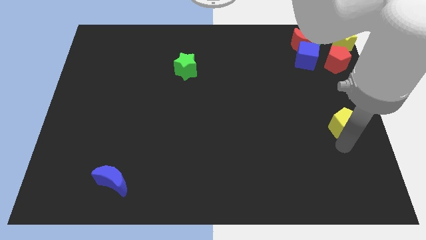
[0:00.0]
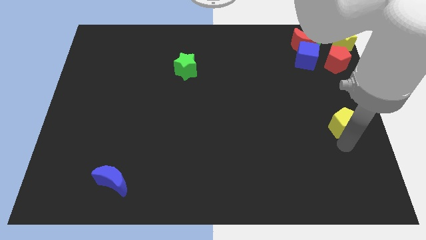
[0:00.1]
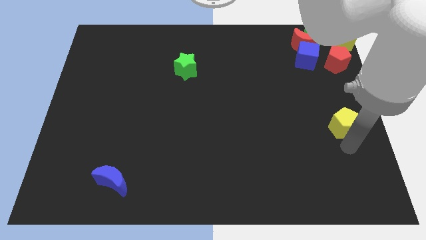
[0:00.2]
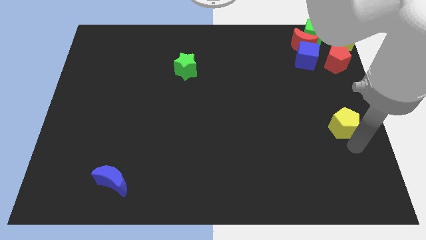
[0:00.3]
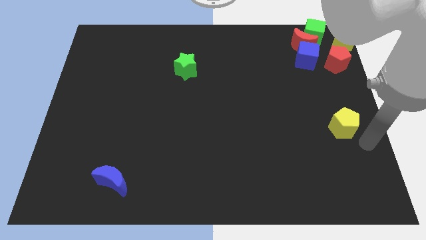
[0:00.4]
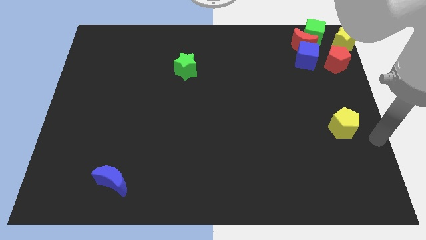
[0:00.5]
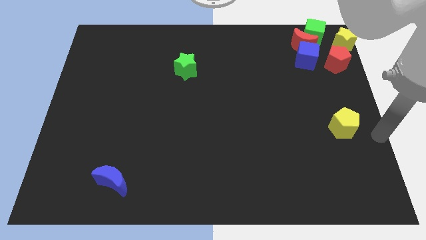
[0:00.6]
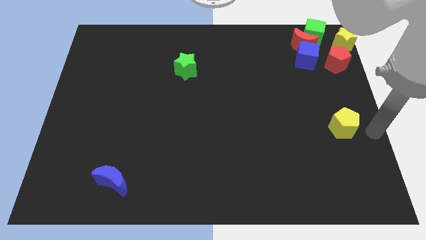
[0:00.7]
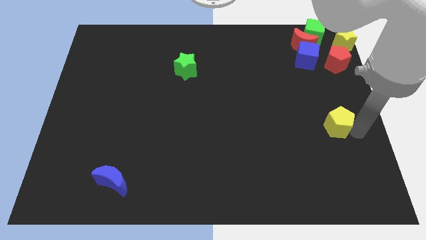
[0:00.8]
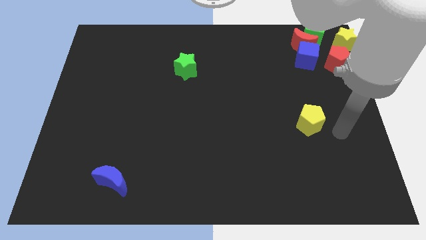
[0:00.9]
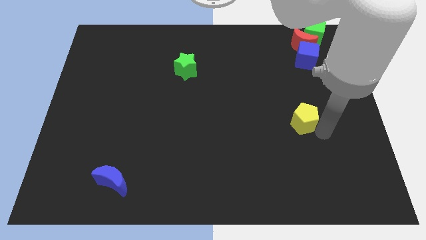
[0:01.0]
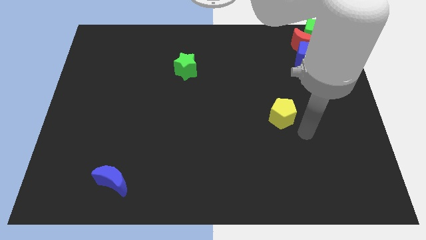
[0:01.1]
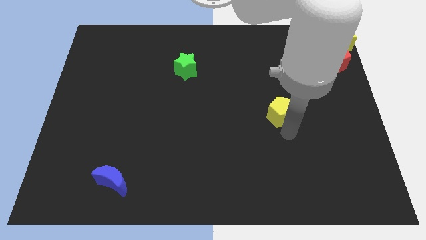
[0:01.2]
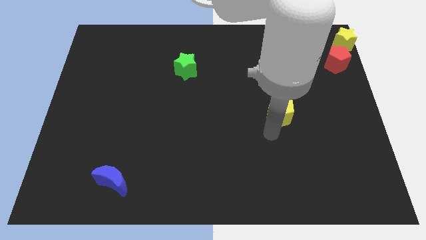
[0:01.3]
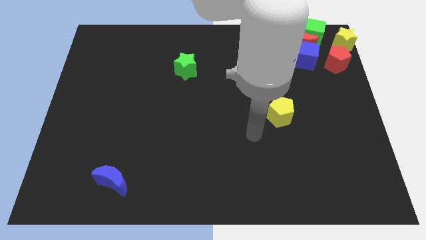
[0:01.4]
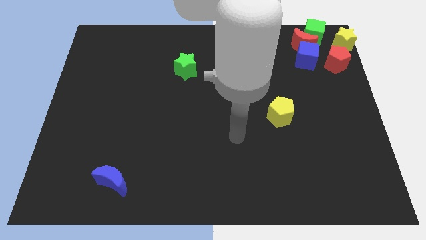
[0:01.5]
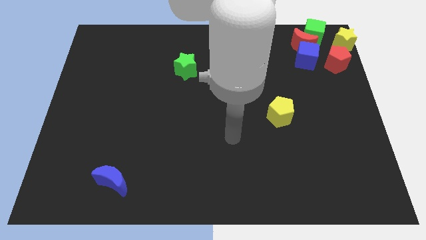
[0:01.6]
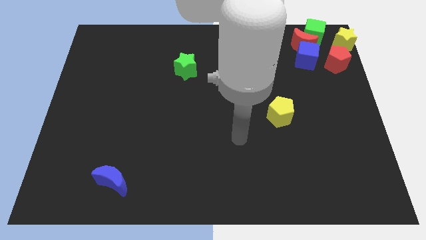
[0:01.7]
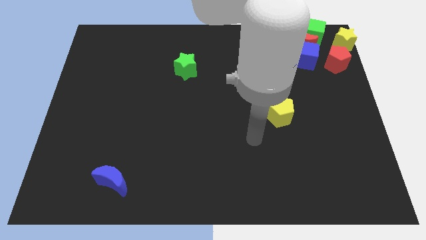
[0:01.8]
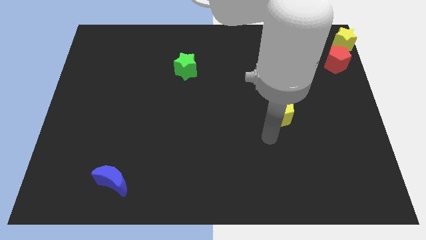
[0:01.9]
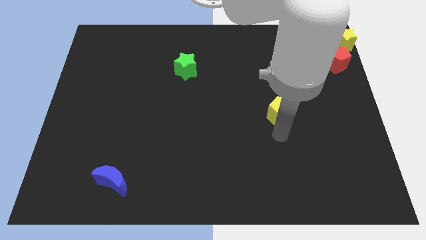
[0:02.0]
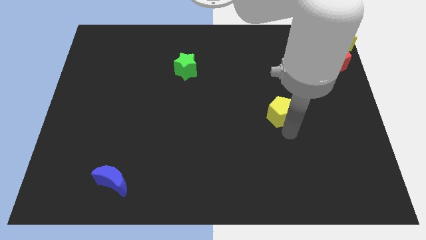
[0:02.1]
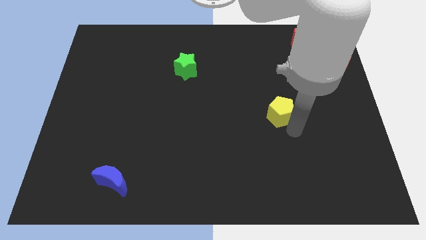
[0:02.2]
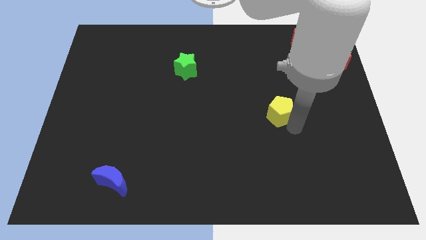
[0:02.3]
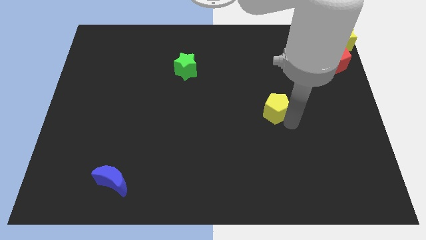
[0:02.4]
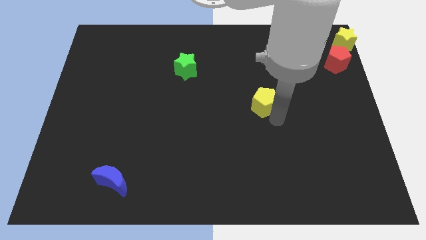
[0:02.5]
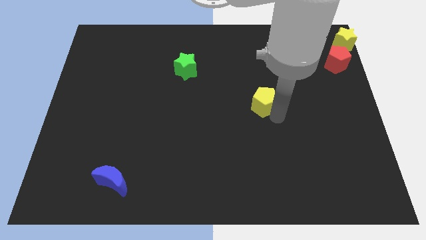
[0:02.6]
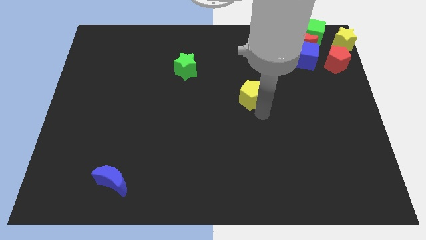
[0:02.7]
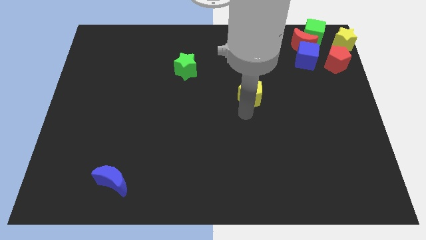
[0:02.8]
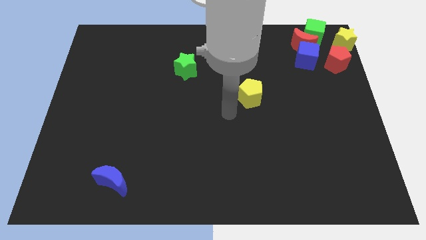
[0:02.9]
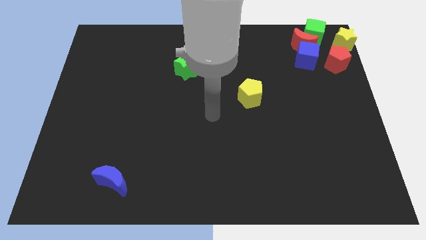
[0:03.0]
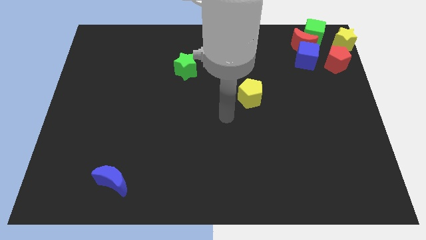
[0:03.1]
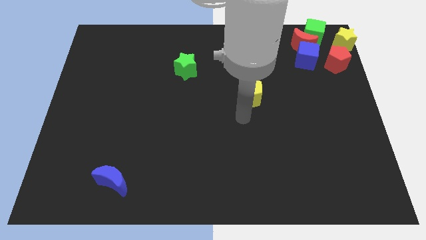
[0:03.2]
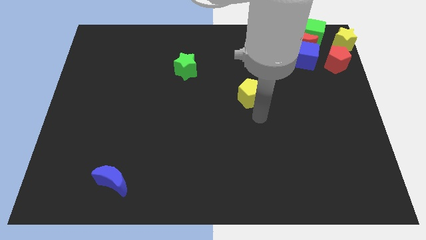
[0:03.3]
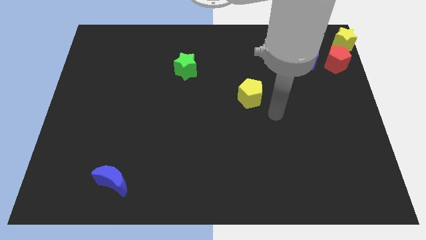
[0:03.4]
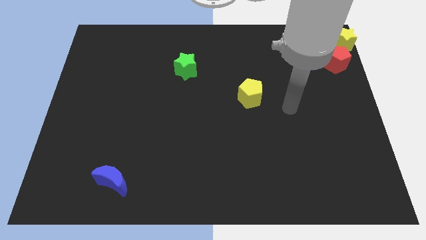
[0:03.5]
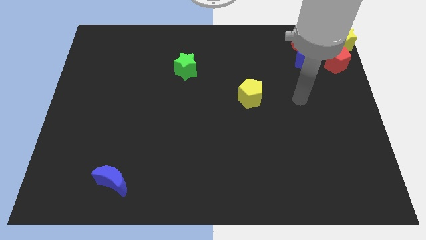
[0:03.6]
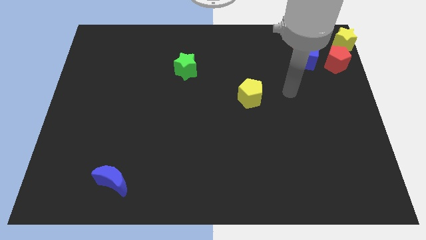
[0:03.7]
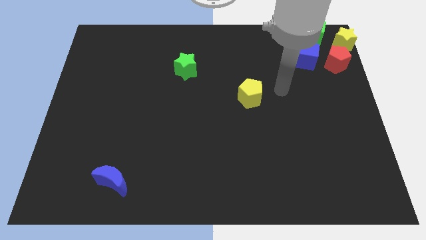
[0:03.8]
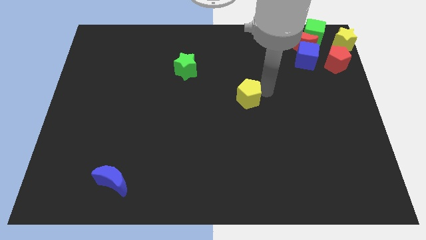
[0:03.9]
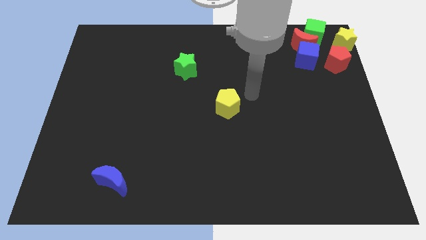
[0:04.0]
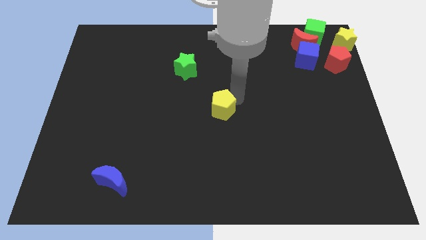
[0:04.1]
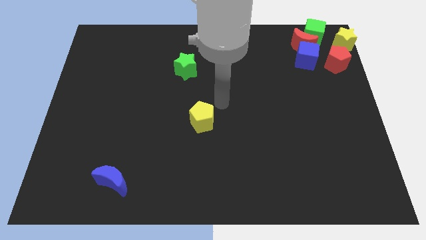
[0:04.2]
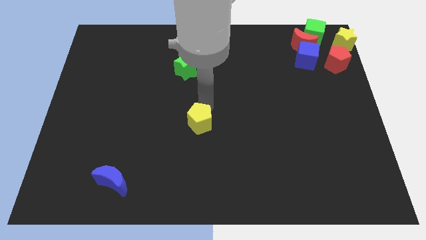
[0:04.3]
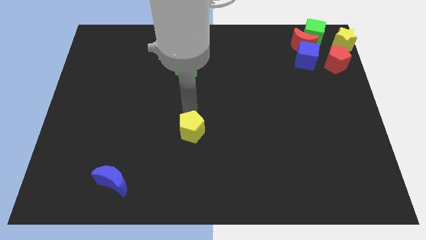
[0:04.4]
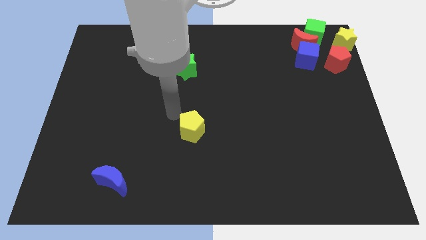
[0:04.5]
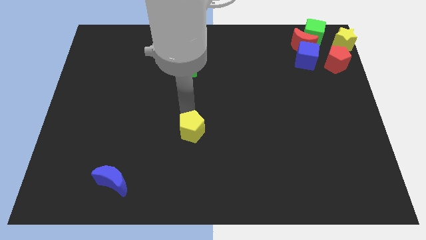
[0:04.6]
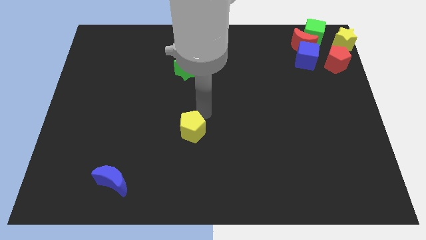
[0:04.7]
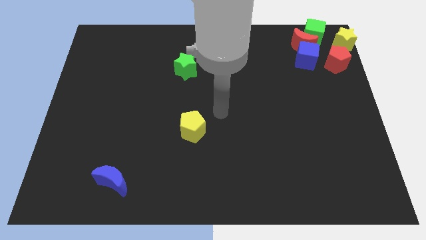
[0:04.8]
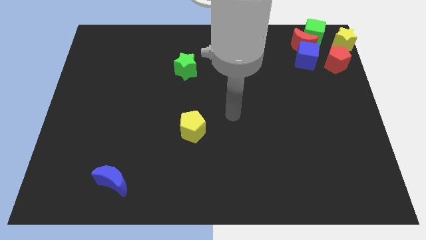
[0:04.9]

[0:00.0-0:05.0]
place the yellow pentagon below the green star

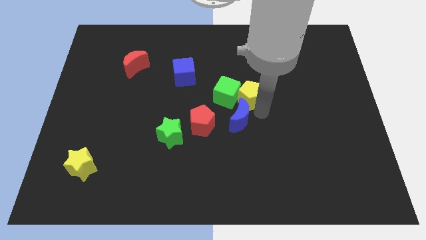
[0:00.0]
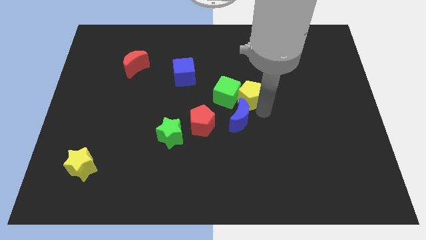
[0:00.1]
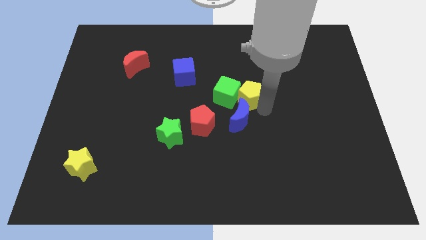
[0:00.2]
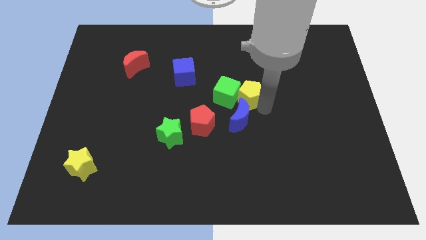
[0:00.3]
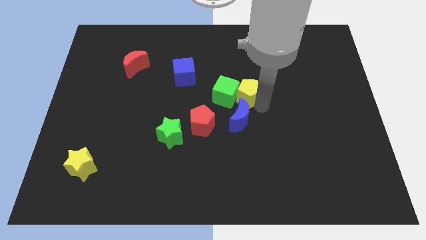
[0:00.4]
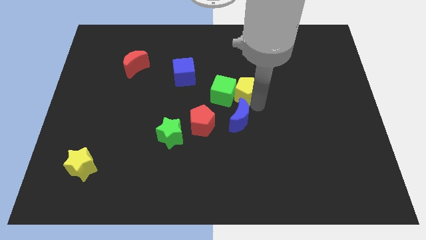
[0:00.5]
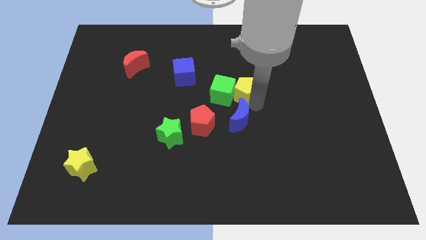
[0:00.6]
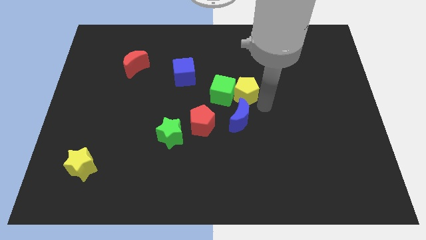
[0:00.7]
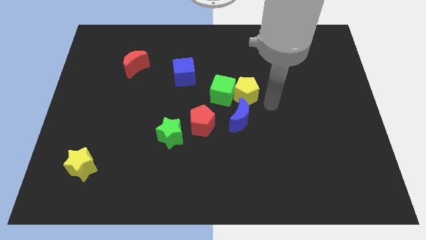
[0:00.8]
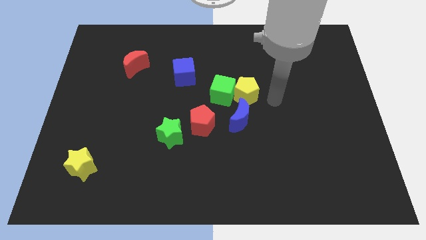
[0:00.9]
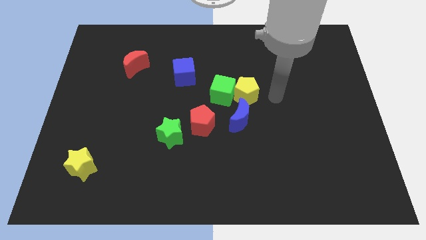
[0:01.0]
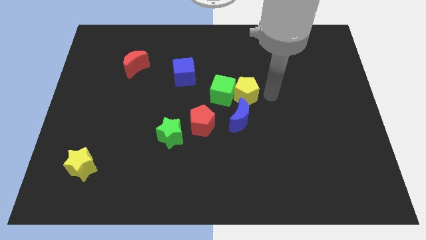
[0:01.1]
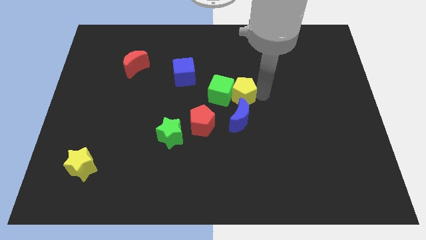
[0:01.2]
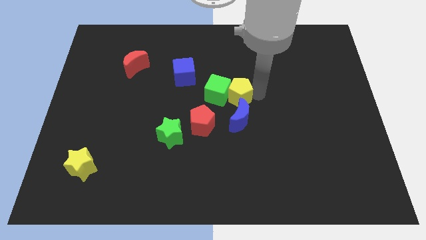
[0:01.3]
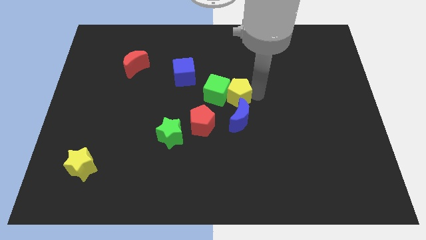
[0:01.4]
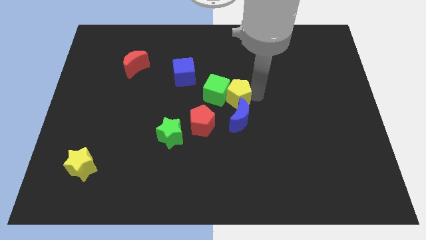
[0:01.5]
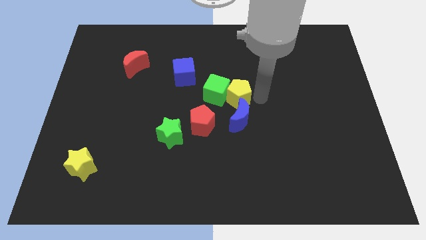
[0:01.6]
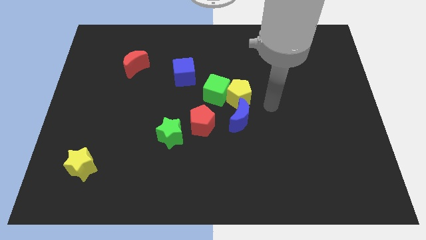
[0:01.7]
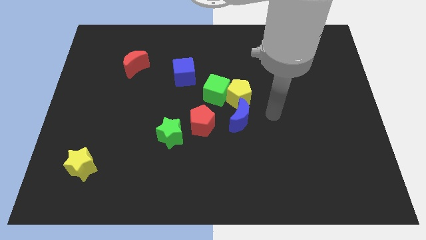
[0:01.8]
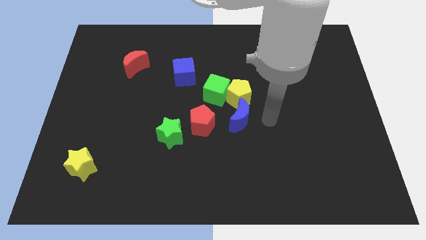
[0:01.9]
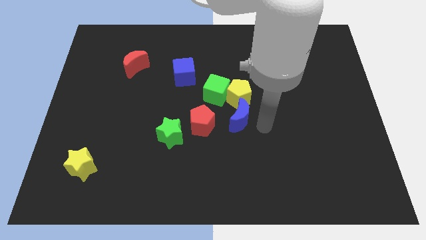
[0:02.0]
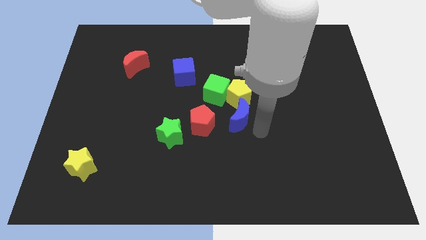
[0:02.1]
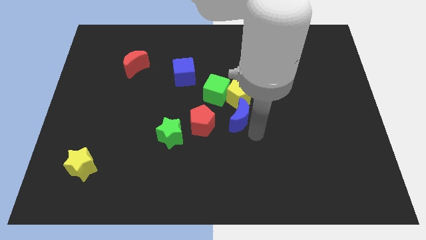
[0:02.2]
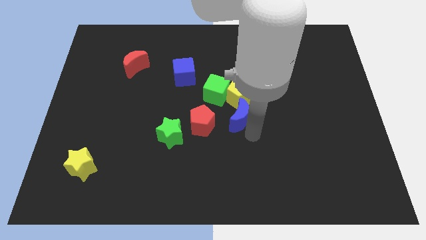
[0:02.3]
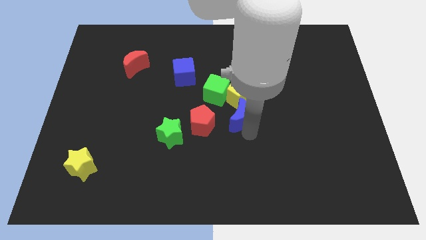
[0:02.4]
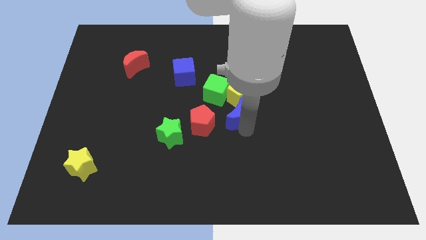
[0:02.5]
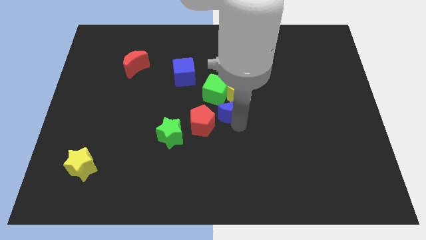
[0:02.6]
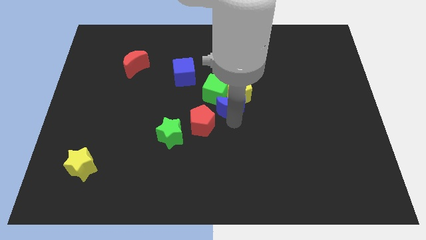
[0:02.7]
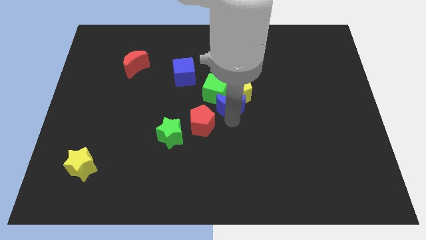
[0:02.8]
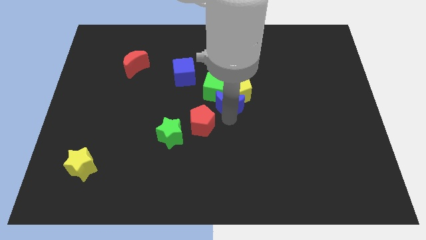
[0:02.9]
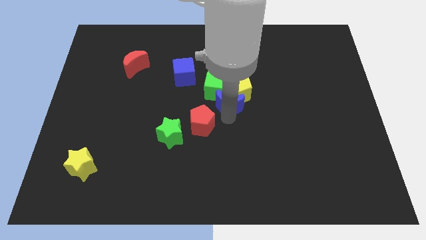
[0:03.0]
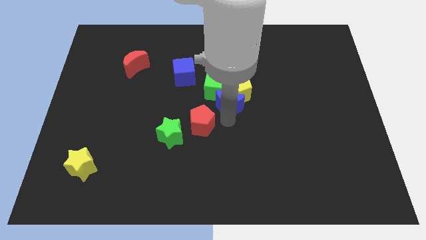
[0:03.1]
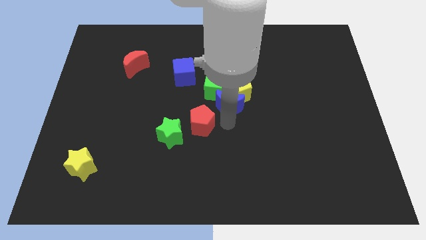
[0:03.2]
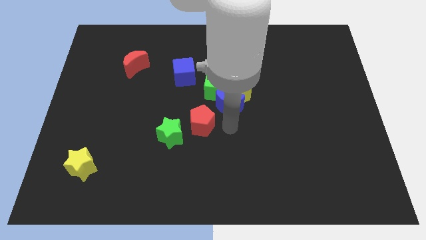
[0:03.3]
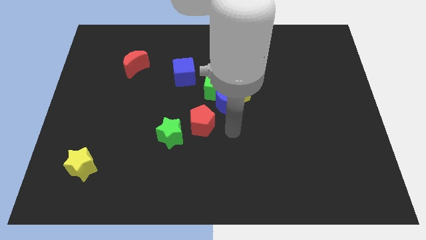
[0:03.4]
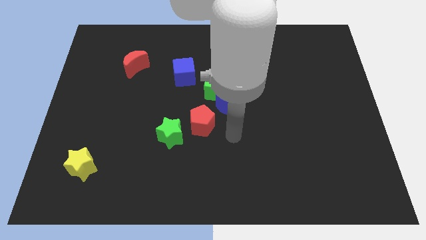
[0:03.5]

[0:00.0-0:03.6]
push yellow pentagonblue moon in to green cube

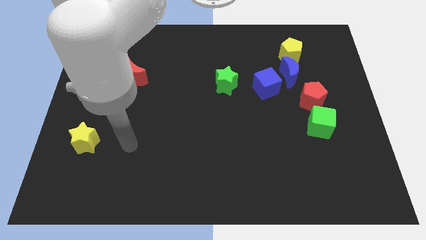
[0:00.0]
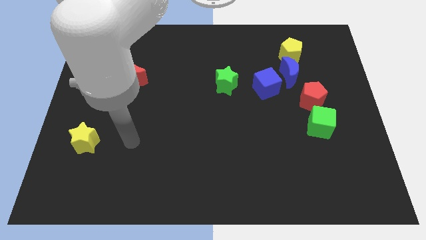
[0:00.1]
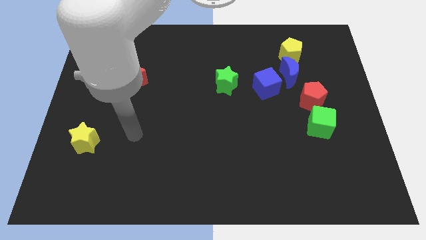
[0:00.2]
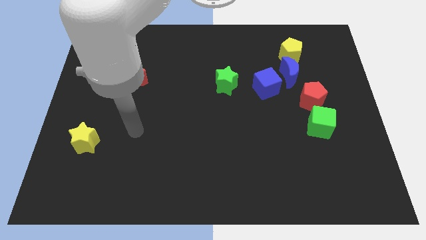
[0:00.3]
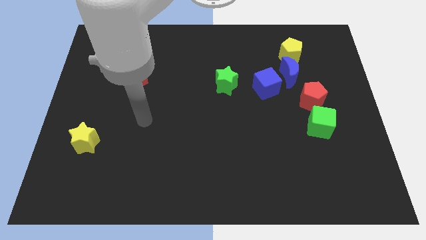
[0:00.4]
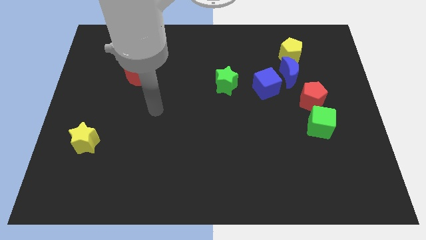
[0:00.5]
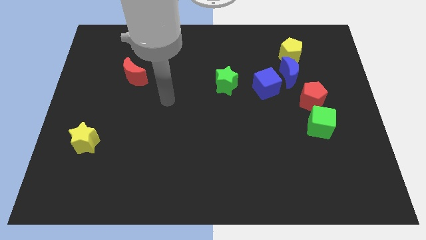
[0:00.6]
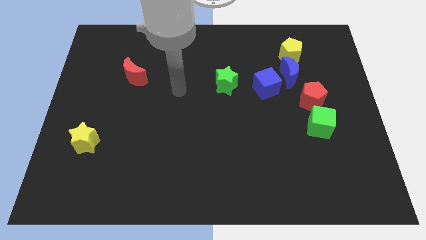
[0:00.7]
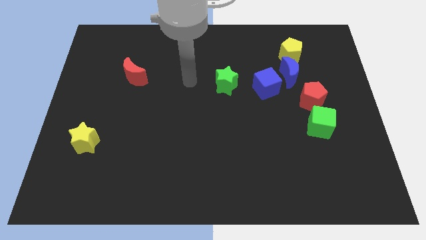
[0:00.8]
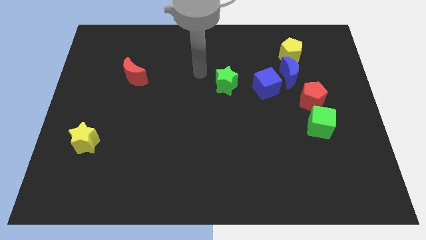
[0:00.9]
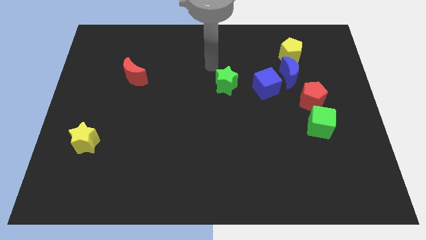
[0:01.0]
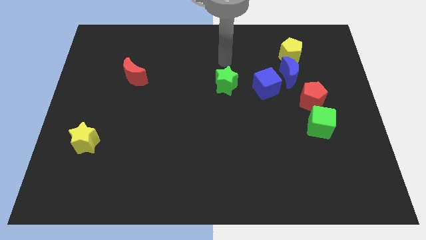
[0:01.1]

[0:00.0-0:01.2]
place your arm to the top of green star
